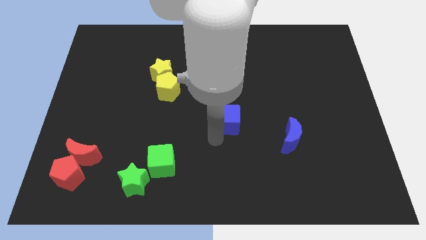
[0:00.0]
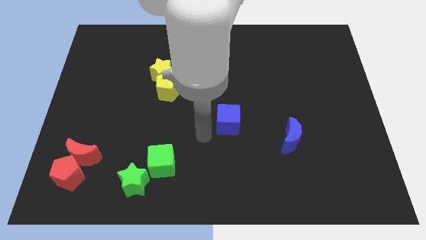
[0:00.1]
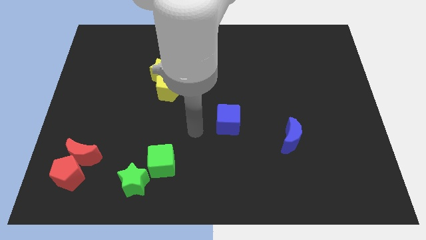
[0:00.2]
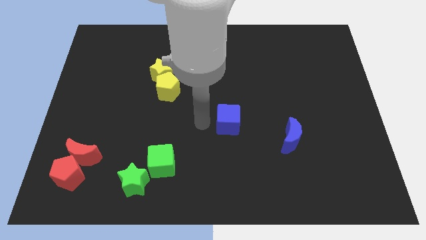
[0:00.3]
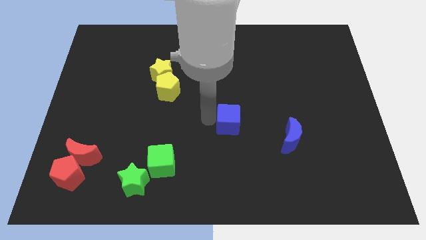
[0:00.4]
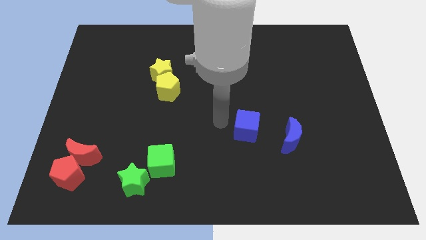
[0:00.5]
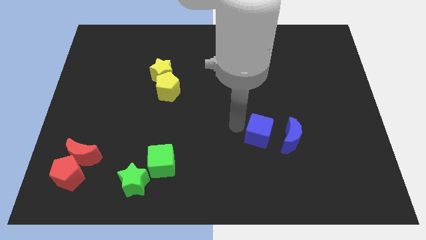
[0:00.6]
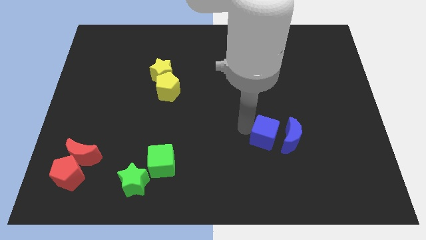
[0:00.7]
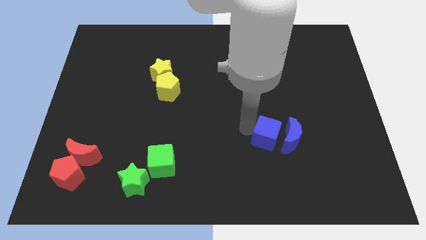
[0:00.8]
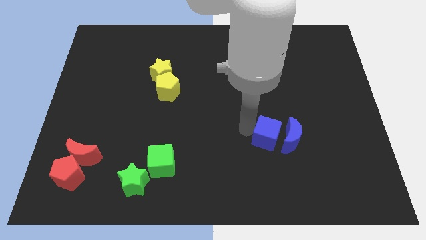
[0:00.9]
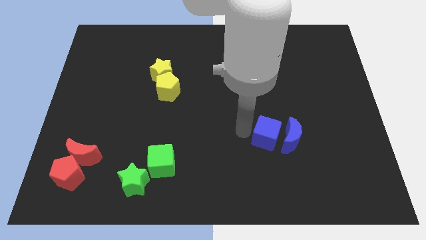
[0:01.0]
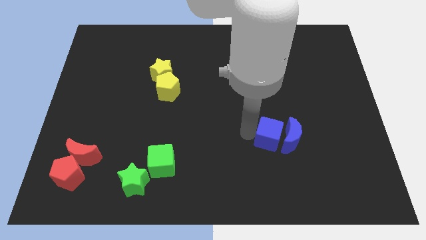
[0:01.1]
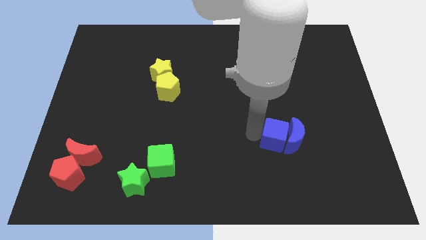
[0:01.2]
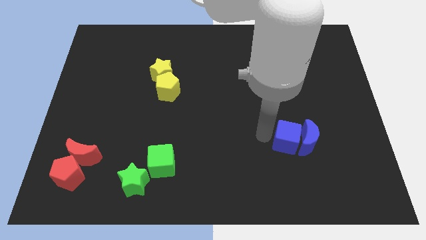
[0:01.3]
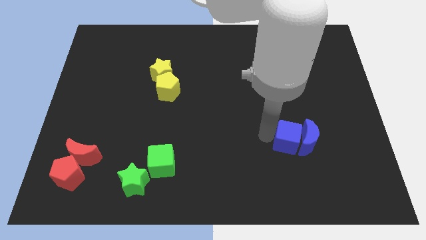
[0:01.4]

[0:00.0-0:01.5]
push the blue cube into the blue moon

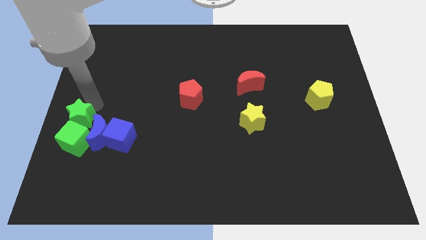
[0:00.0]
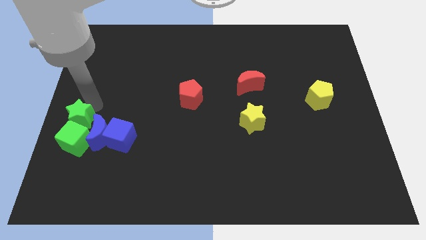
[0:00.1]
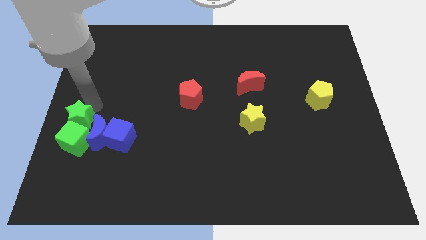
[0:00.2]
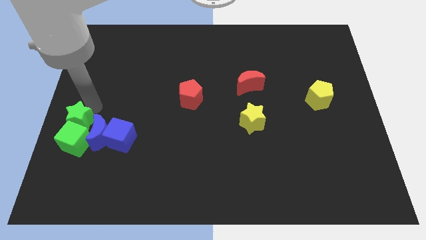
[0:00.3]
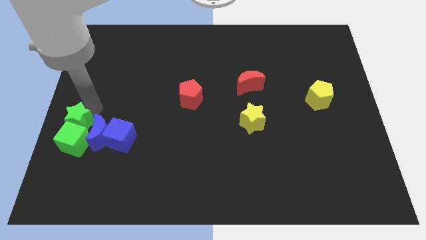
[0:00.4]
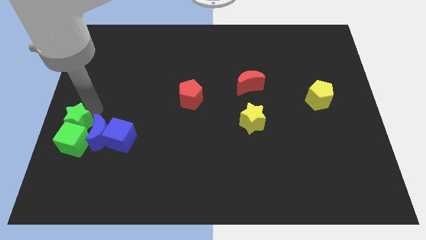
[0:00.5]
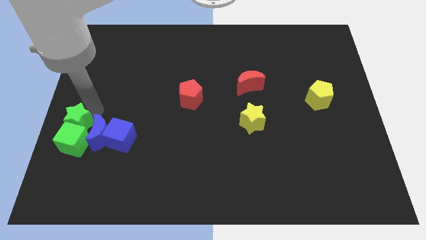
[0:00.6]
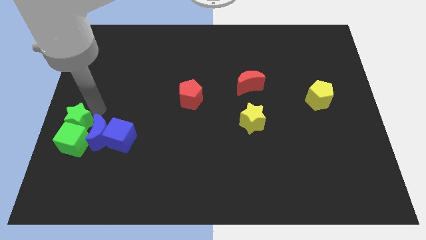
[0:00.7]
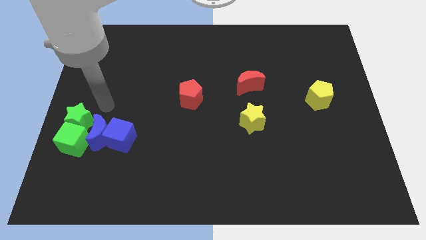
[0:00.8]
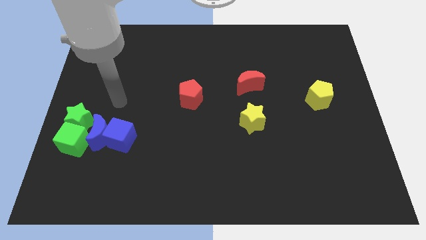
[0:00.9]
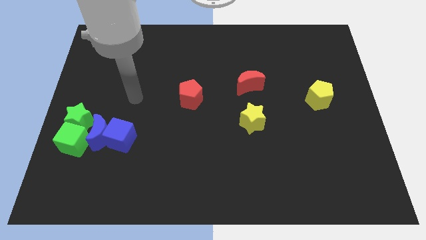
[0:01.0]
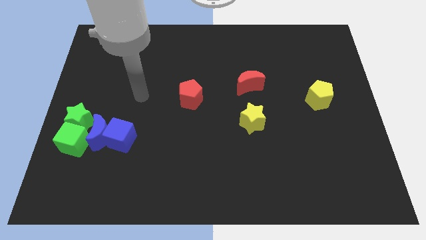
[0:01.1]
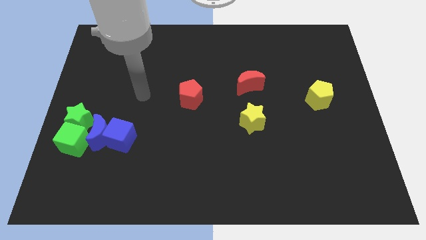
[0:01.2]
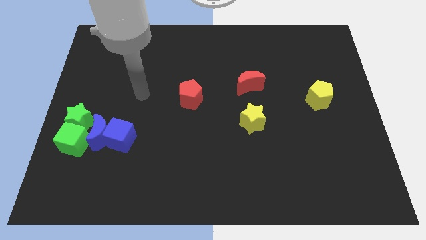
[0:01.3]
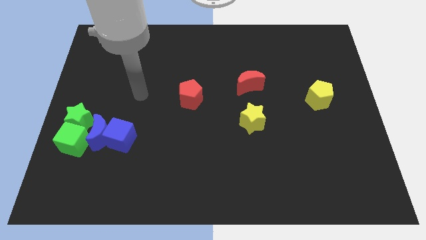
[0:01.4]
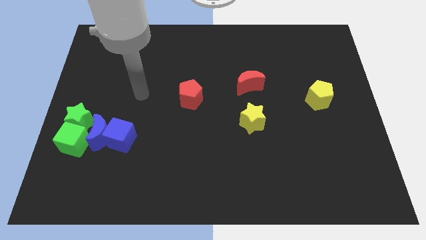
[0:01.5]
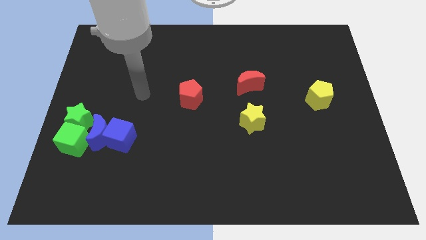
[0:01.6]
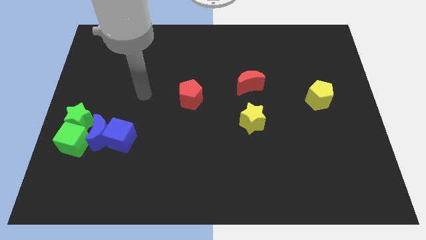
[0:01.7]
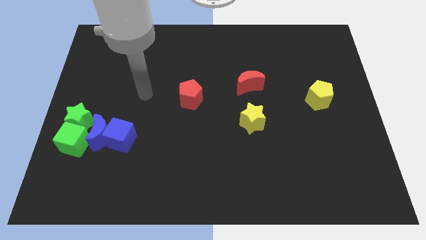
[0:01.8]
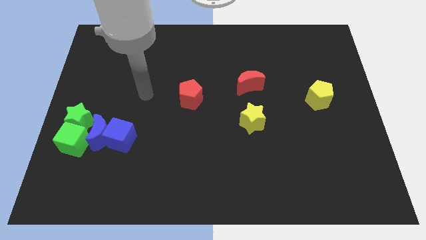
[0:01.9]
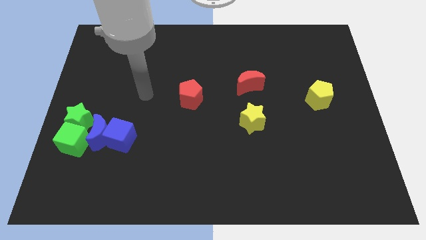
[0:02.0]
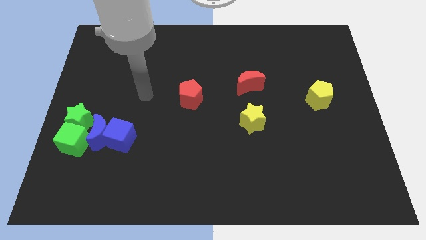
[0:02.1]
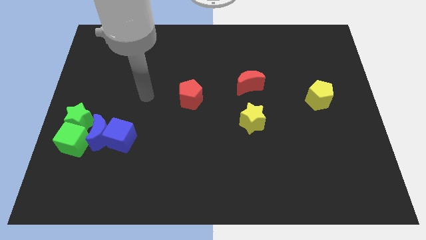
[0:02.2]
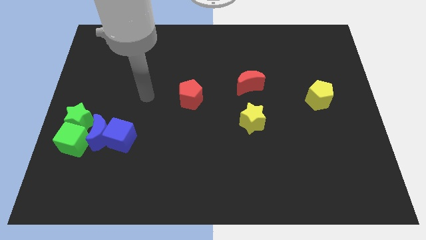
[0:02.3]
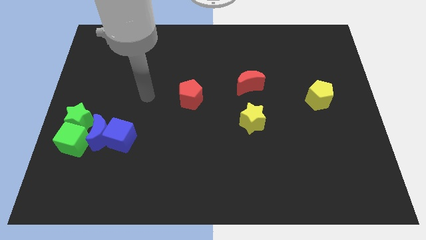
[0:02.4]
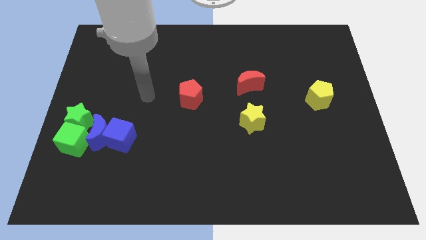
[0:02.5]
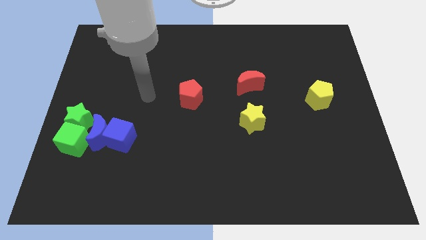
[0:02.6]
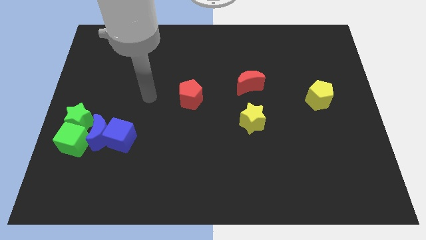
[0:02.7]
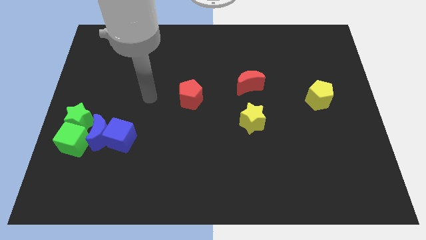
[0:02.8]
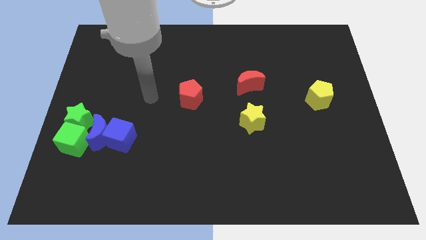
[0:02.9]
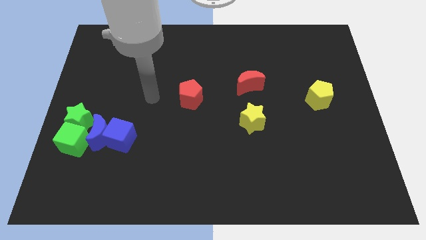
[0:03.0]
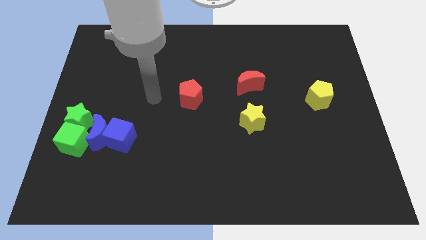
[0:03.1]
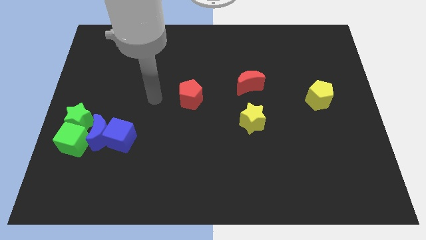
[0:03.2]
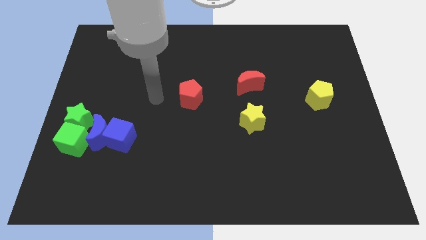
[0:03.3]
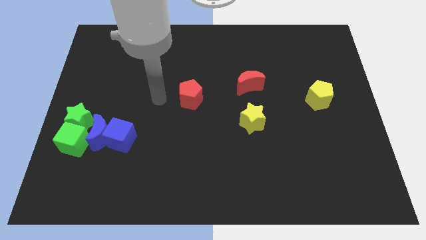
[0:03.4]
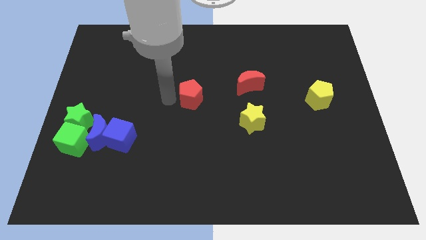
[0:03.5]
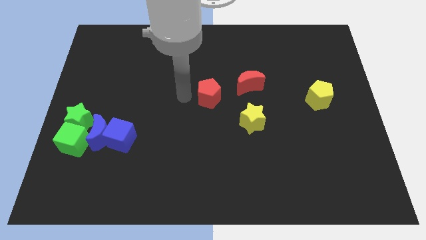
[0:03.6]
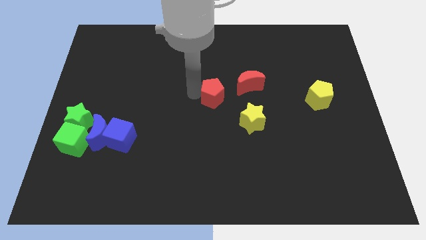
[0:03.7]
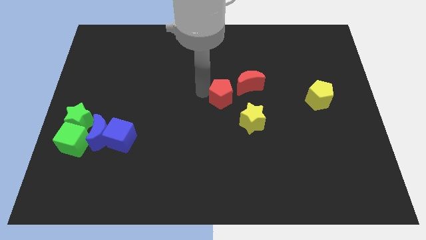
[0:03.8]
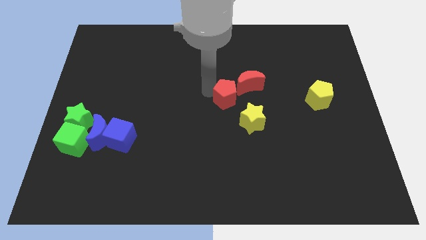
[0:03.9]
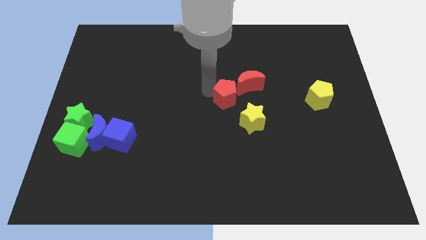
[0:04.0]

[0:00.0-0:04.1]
push the red pentagon to the left side of the red crescent

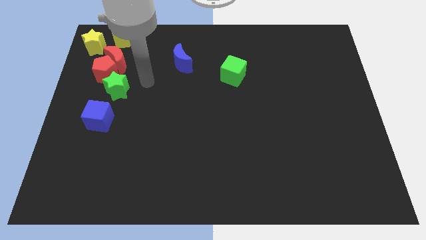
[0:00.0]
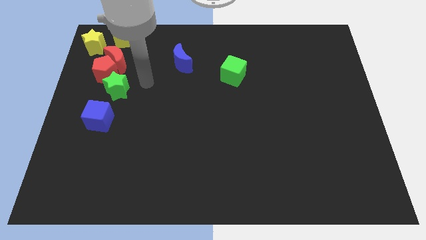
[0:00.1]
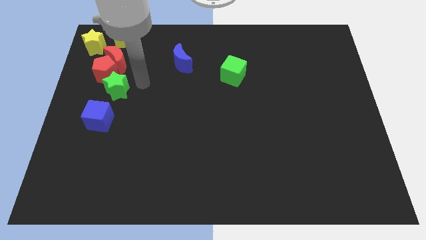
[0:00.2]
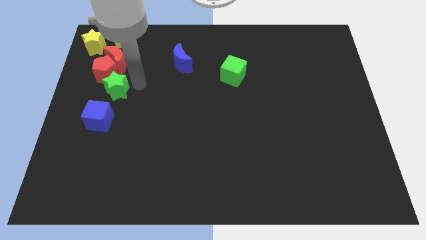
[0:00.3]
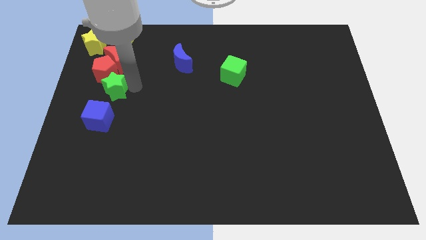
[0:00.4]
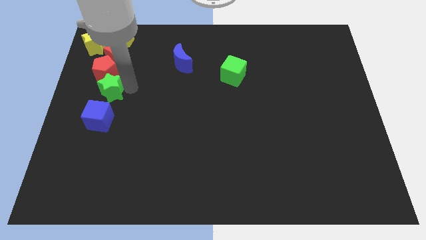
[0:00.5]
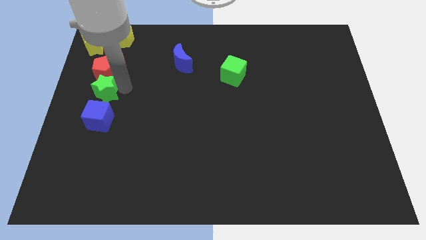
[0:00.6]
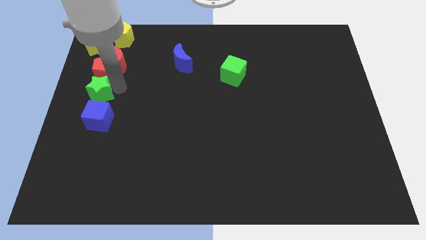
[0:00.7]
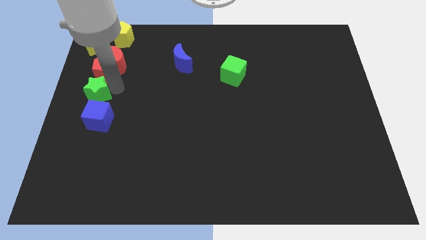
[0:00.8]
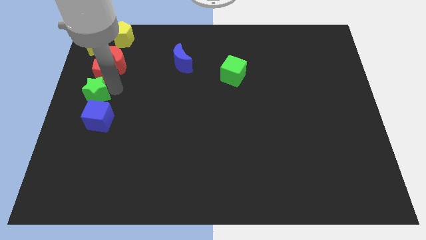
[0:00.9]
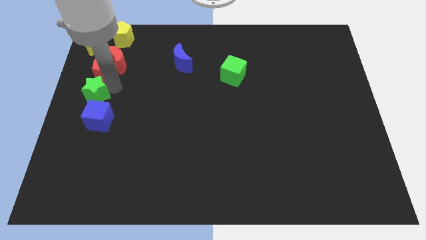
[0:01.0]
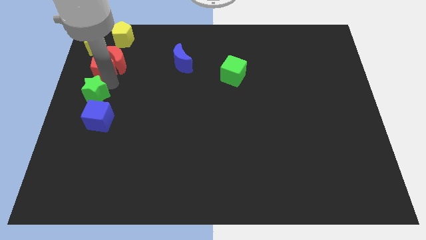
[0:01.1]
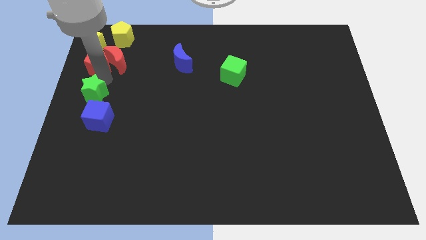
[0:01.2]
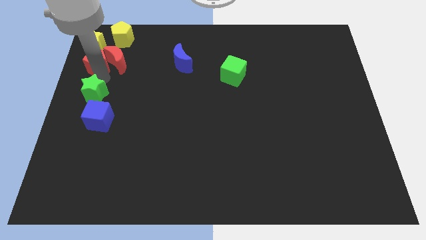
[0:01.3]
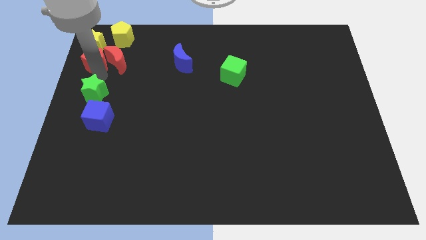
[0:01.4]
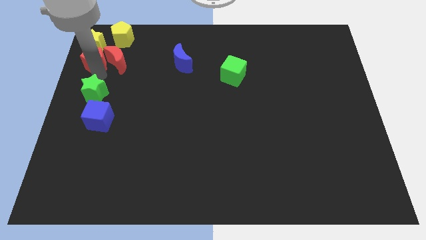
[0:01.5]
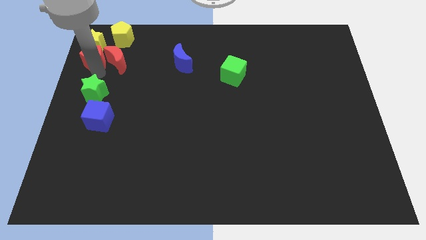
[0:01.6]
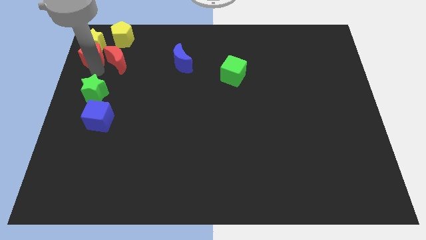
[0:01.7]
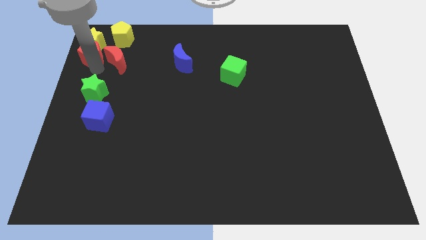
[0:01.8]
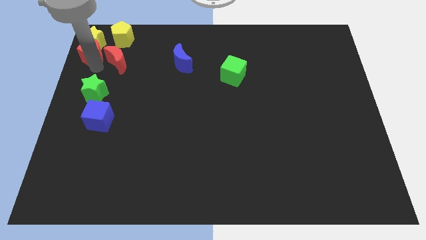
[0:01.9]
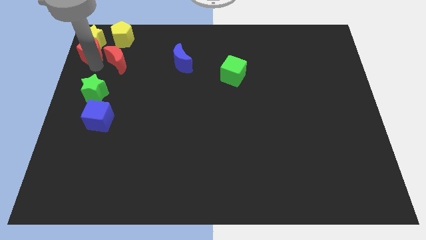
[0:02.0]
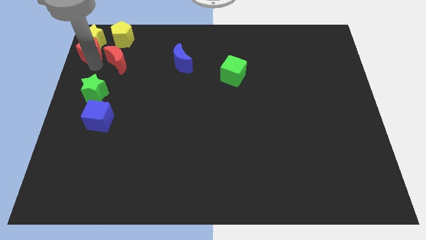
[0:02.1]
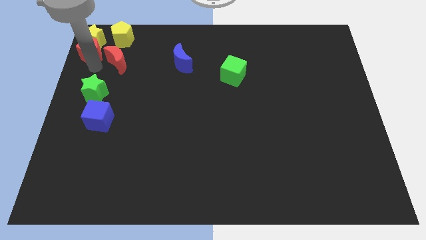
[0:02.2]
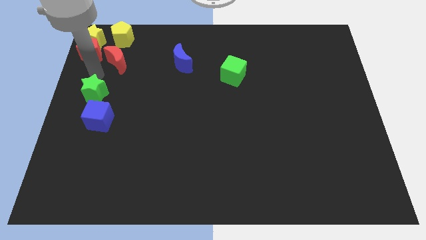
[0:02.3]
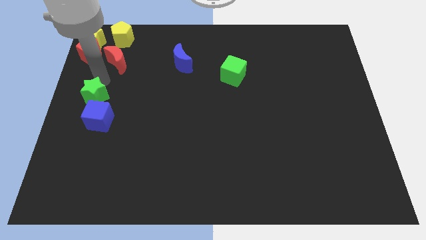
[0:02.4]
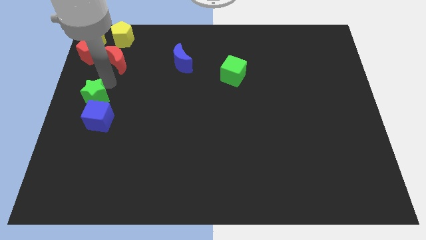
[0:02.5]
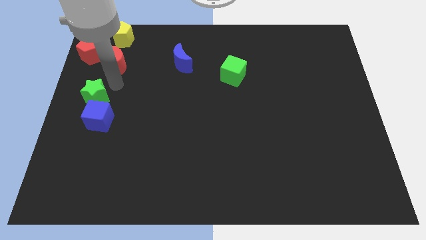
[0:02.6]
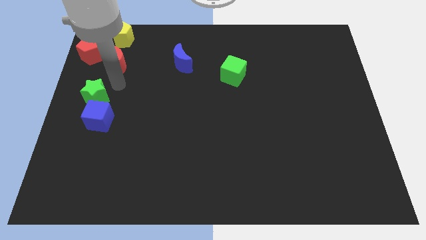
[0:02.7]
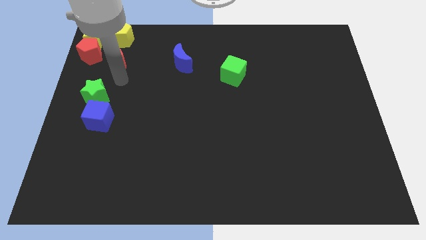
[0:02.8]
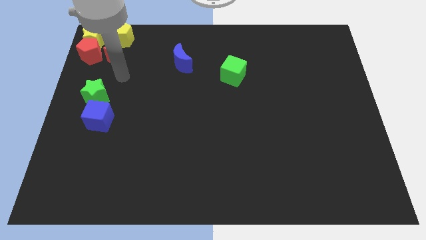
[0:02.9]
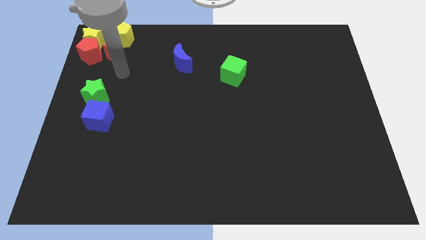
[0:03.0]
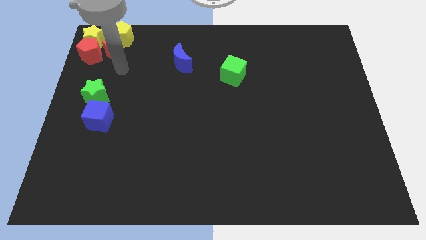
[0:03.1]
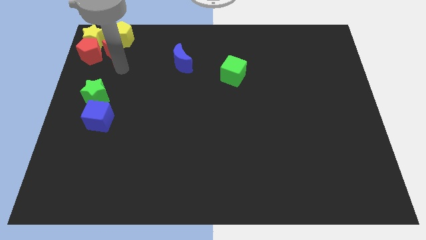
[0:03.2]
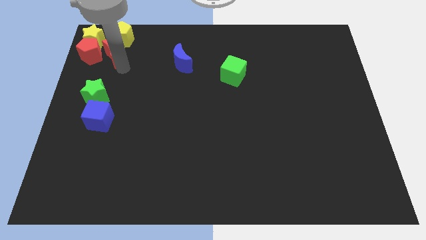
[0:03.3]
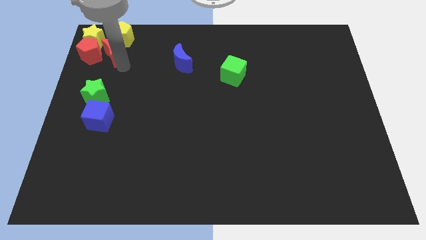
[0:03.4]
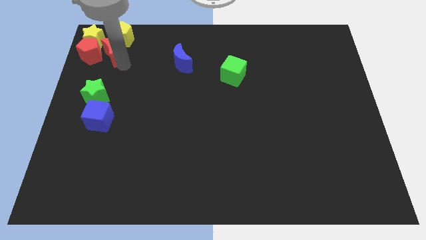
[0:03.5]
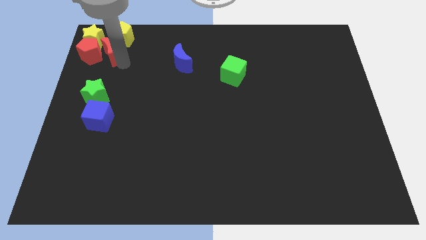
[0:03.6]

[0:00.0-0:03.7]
separate the green star from red blocks
